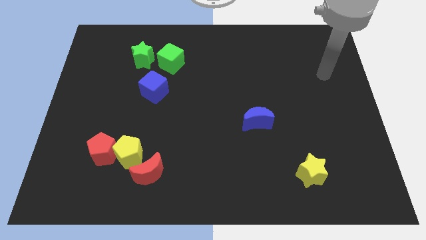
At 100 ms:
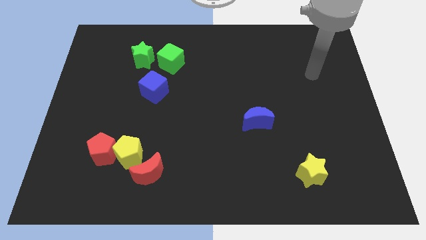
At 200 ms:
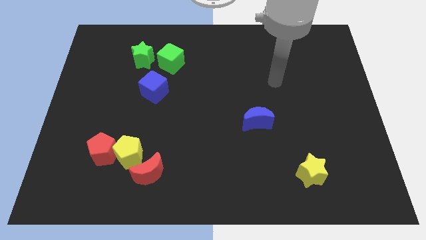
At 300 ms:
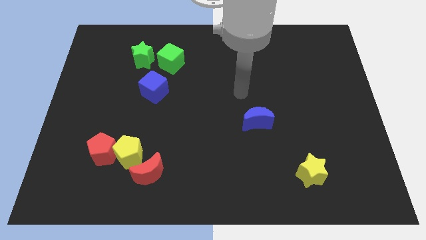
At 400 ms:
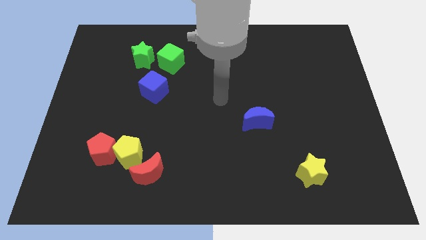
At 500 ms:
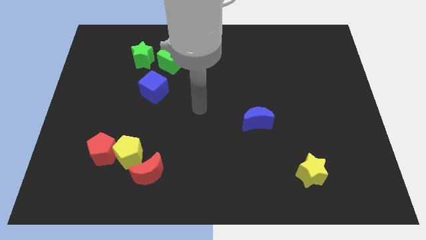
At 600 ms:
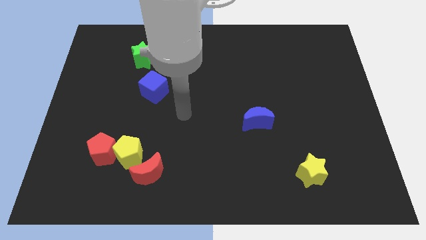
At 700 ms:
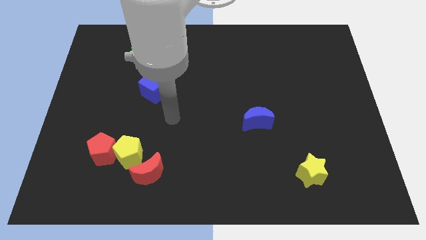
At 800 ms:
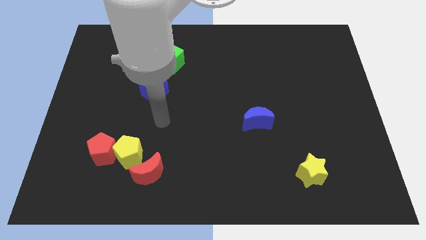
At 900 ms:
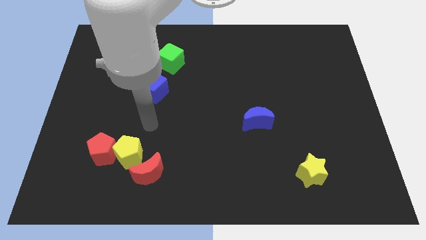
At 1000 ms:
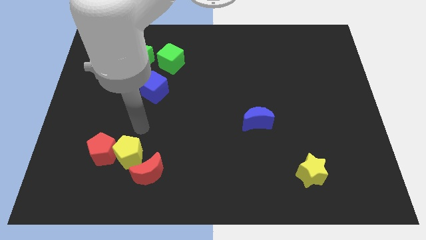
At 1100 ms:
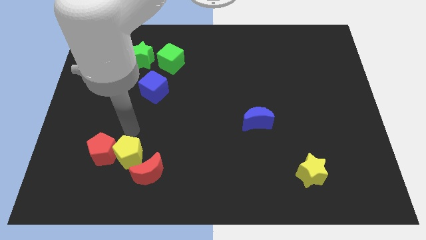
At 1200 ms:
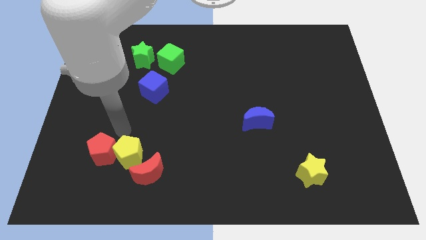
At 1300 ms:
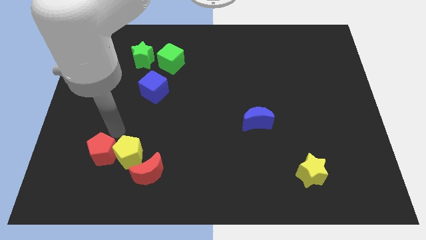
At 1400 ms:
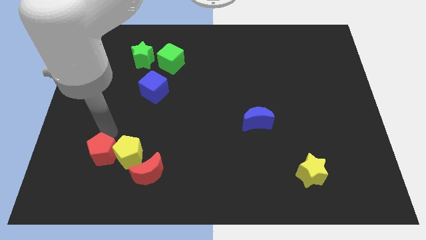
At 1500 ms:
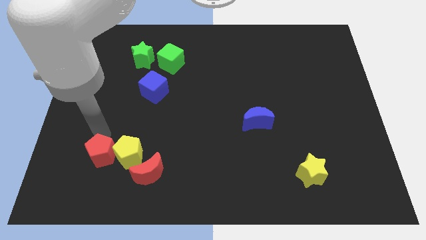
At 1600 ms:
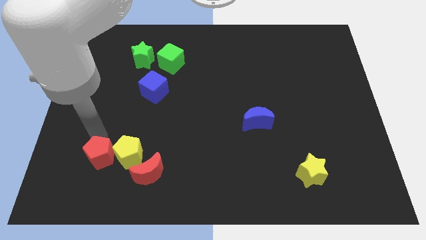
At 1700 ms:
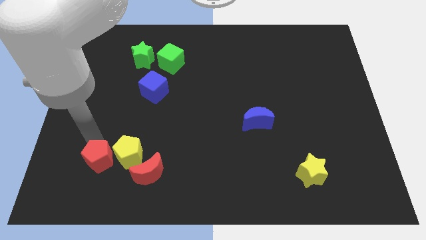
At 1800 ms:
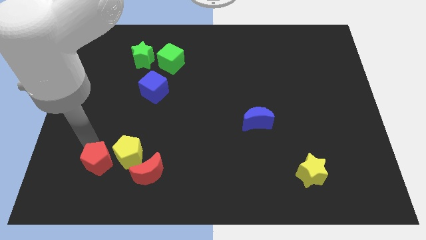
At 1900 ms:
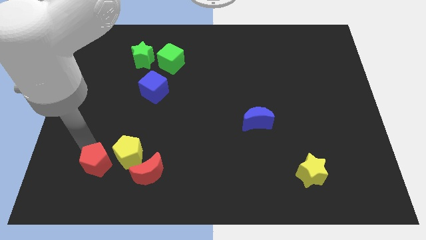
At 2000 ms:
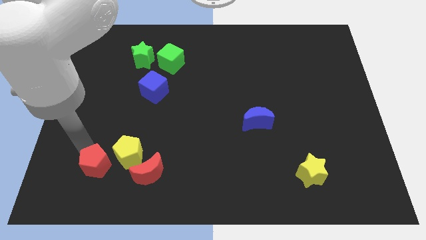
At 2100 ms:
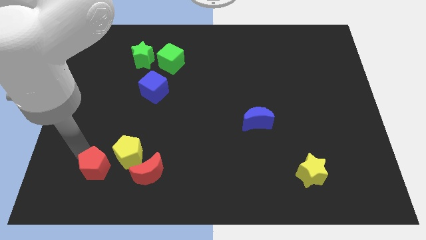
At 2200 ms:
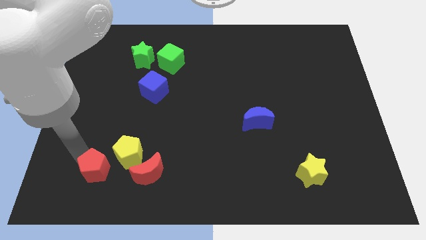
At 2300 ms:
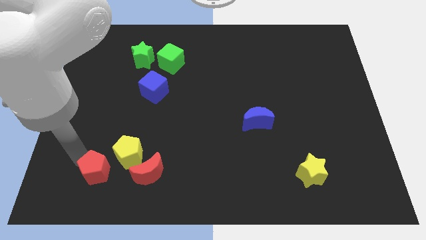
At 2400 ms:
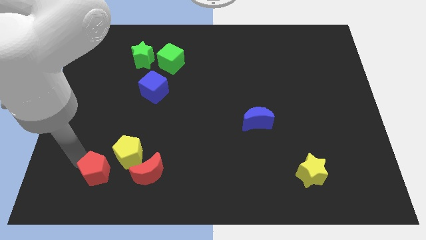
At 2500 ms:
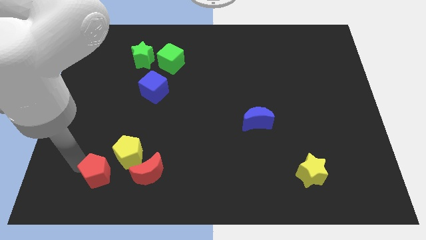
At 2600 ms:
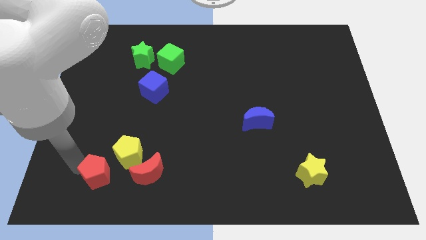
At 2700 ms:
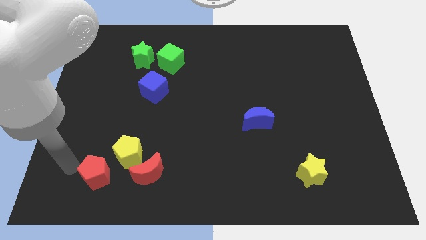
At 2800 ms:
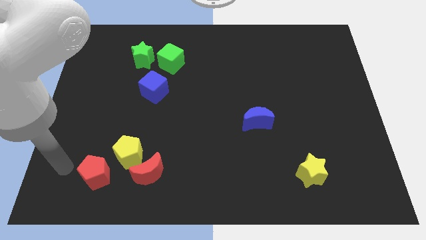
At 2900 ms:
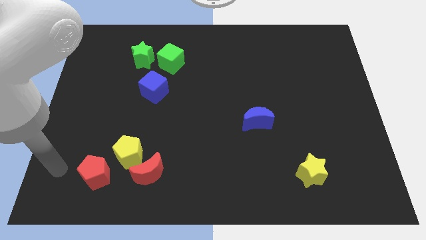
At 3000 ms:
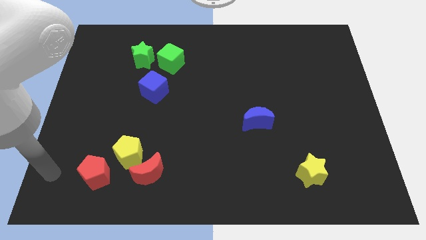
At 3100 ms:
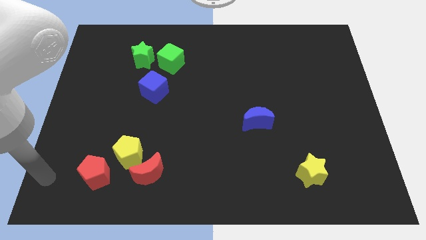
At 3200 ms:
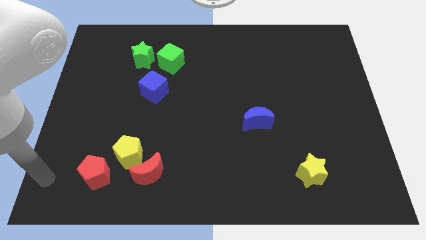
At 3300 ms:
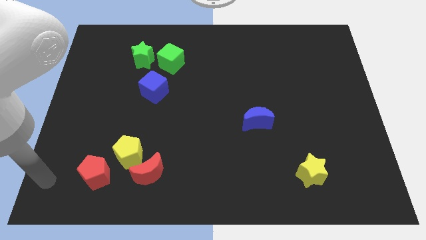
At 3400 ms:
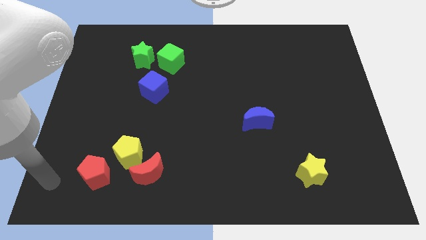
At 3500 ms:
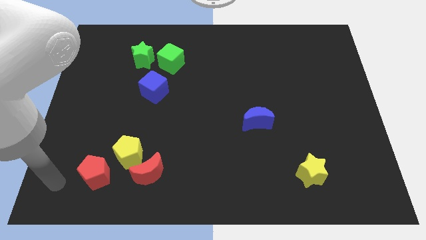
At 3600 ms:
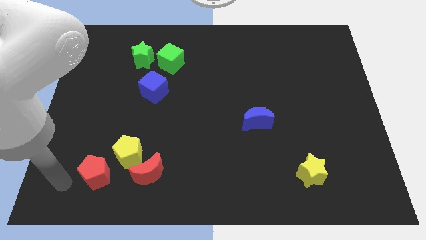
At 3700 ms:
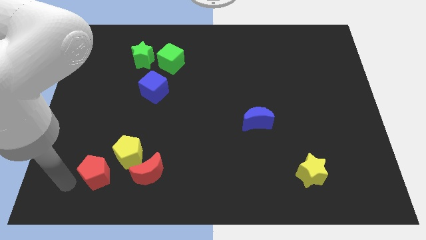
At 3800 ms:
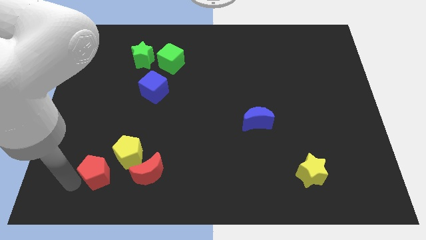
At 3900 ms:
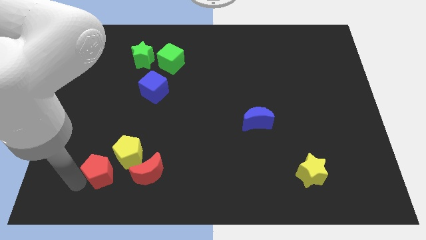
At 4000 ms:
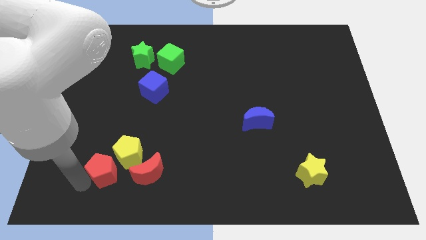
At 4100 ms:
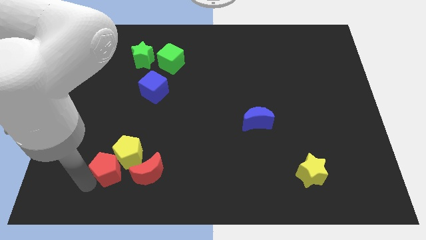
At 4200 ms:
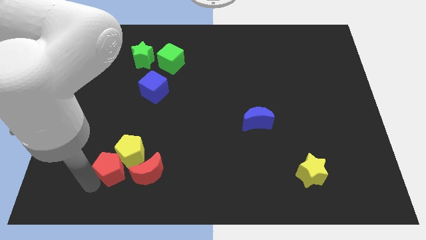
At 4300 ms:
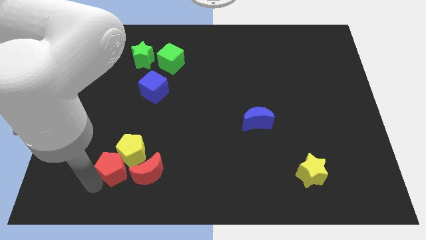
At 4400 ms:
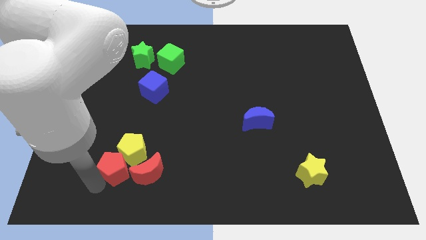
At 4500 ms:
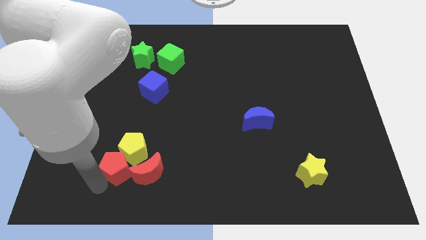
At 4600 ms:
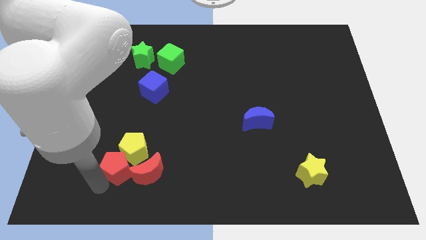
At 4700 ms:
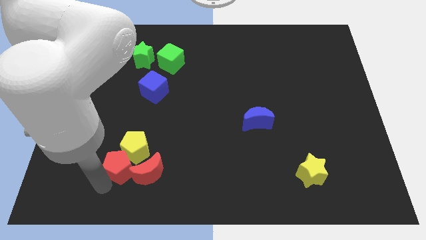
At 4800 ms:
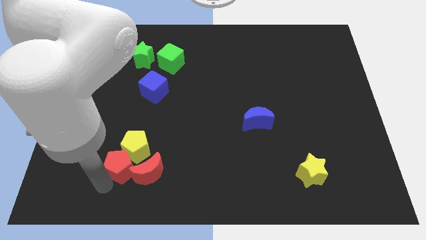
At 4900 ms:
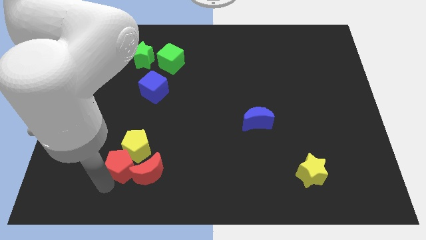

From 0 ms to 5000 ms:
push the red pentagon next to the red moon

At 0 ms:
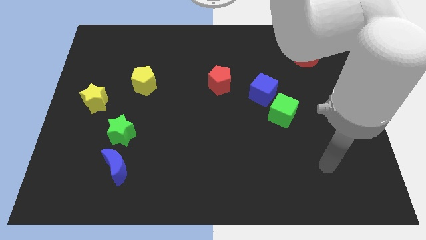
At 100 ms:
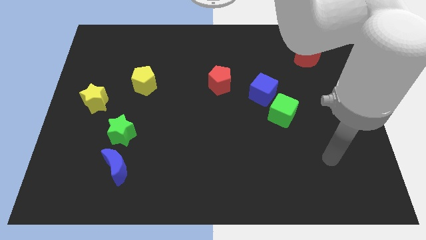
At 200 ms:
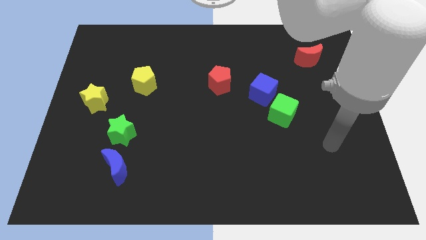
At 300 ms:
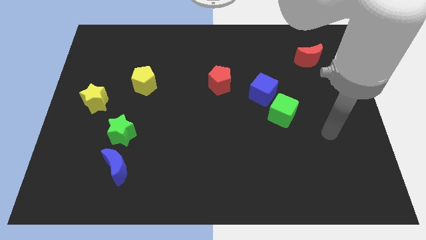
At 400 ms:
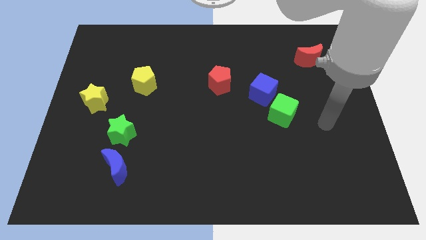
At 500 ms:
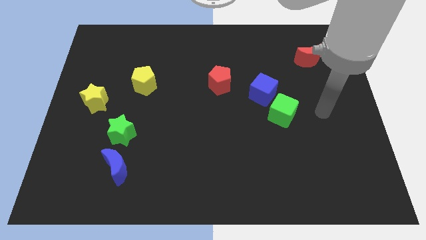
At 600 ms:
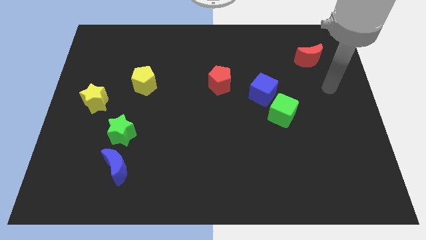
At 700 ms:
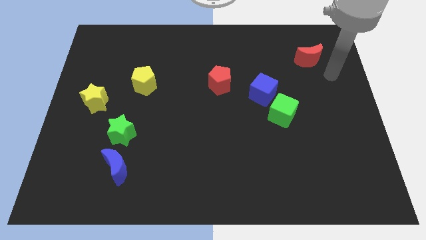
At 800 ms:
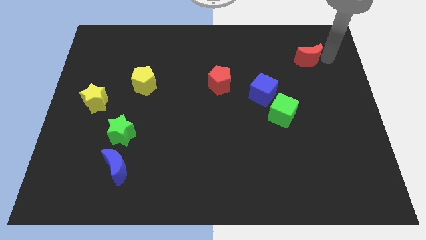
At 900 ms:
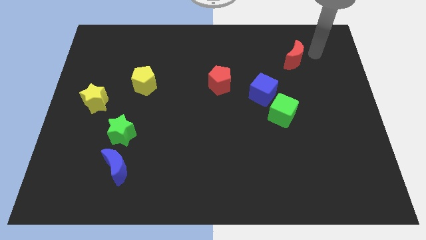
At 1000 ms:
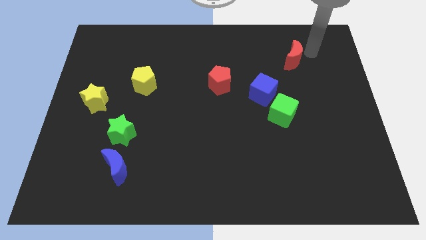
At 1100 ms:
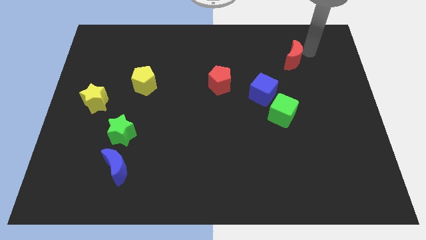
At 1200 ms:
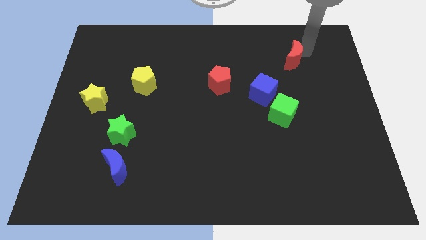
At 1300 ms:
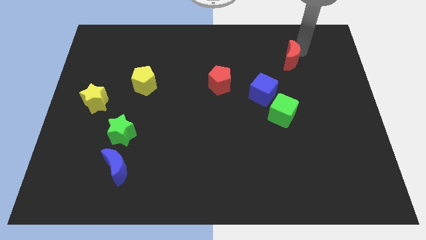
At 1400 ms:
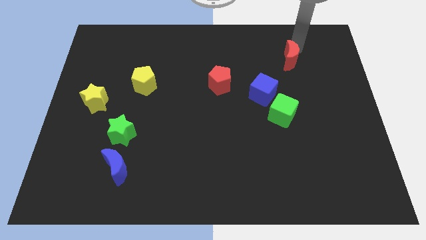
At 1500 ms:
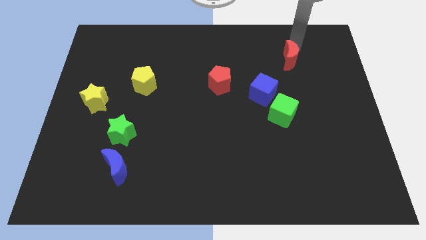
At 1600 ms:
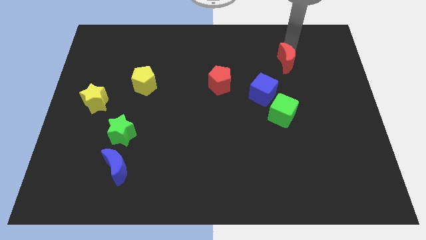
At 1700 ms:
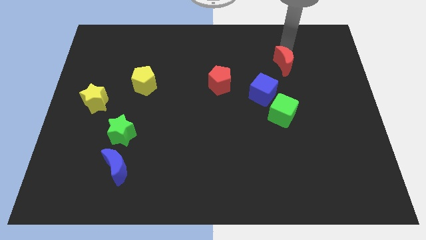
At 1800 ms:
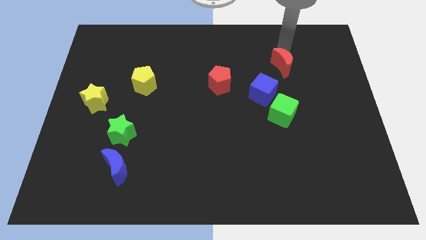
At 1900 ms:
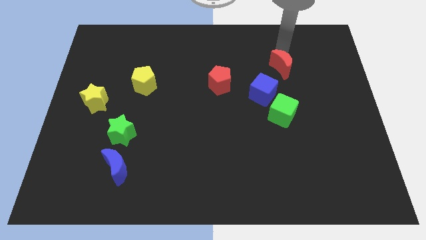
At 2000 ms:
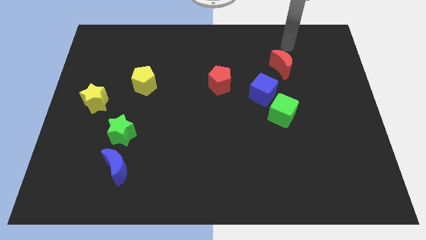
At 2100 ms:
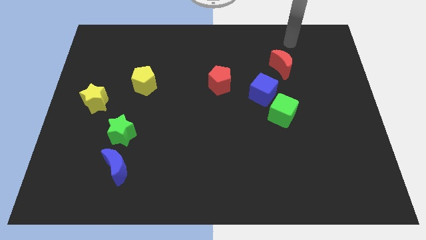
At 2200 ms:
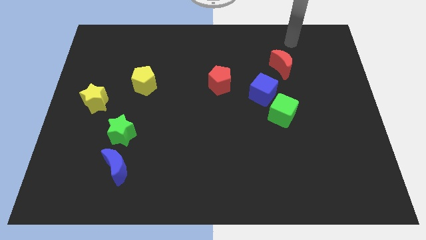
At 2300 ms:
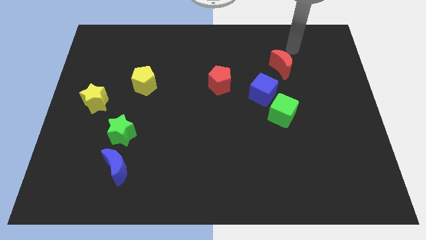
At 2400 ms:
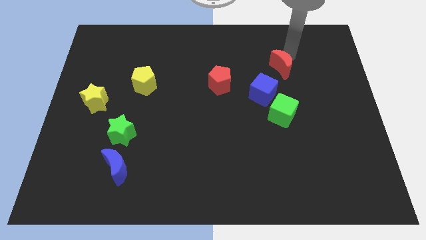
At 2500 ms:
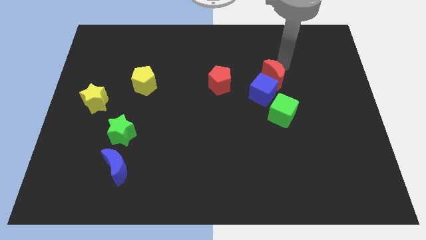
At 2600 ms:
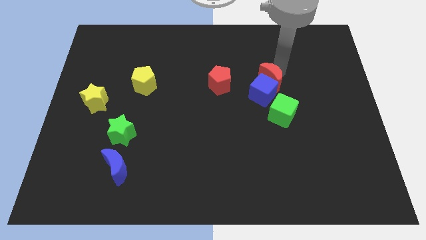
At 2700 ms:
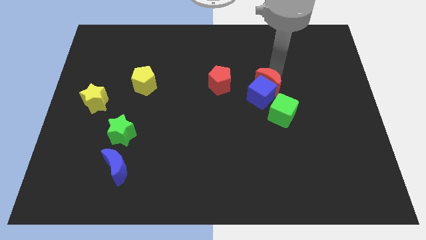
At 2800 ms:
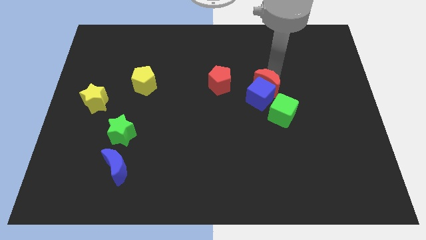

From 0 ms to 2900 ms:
move the red moon towards the blue cube
